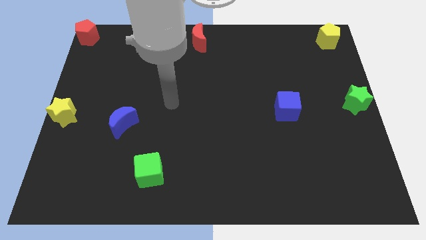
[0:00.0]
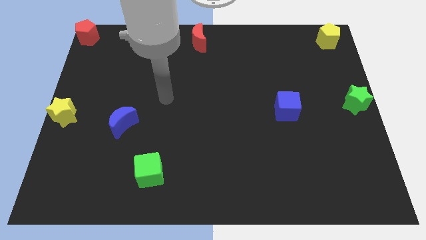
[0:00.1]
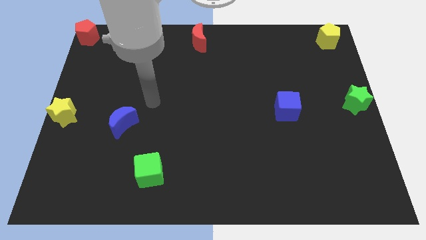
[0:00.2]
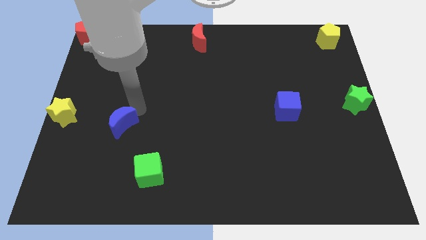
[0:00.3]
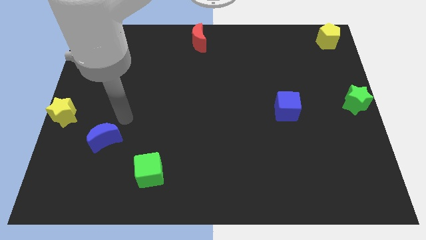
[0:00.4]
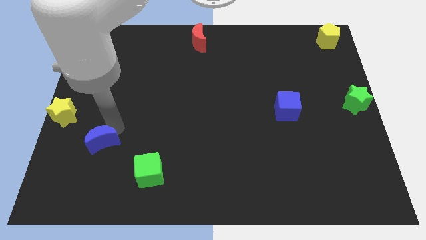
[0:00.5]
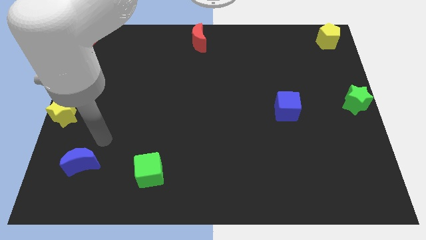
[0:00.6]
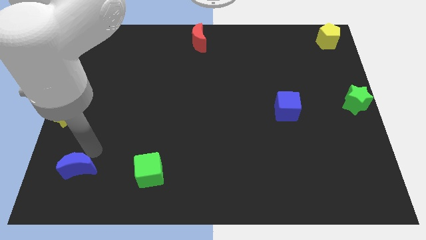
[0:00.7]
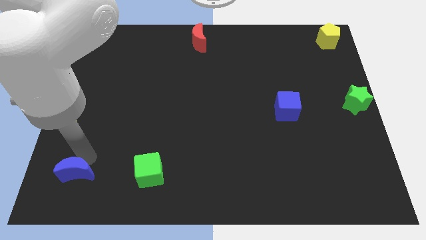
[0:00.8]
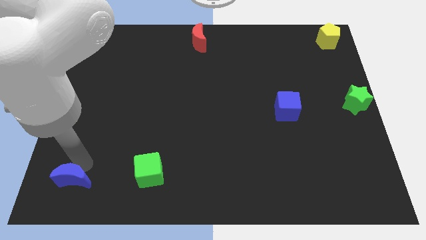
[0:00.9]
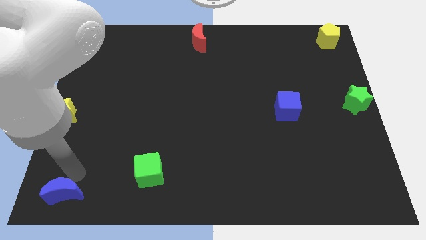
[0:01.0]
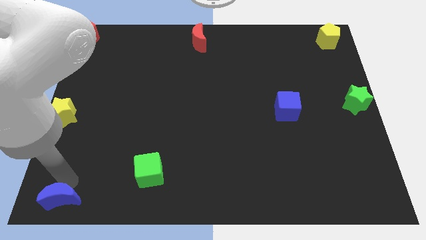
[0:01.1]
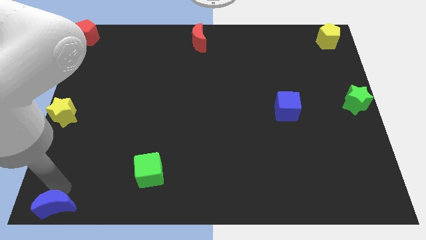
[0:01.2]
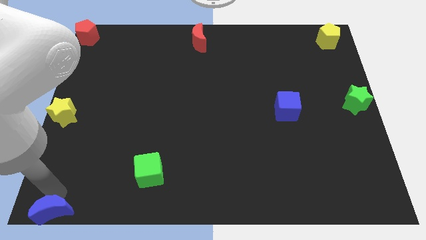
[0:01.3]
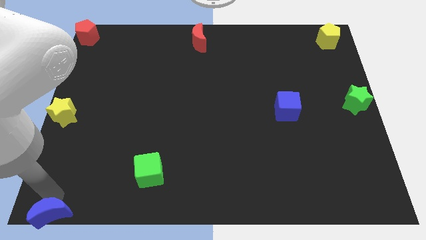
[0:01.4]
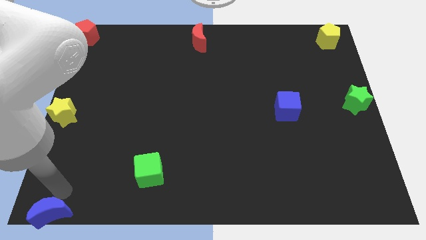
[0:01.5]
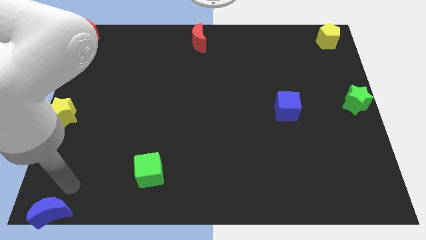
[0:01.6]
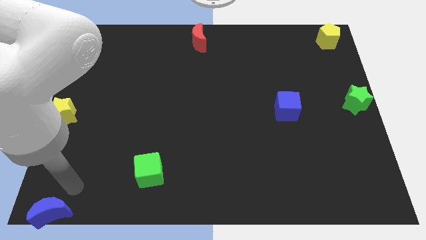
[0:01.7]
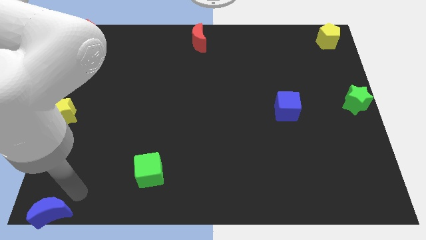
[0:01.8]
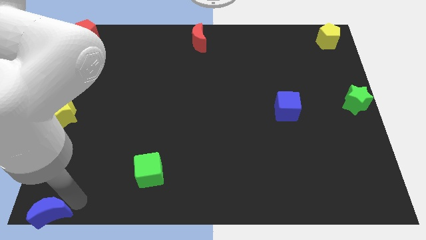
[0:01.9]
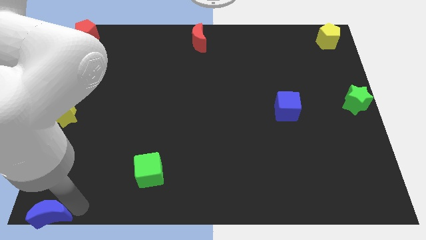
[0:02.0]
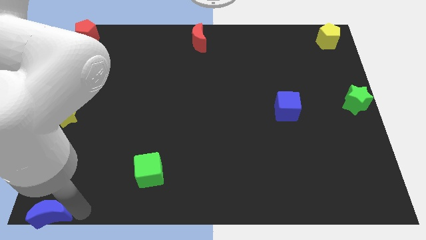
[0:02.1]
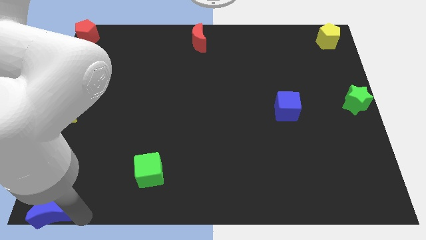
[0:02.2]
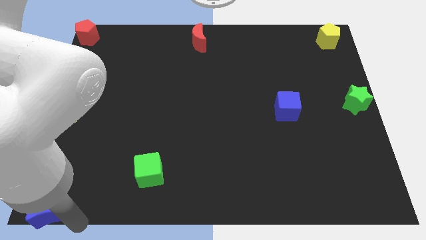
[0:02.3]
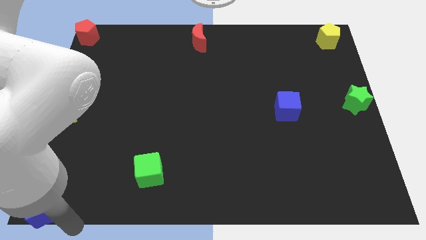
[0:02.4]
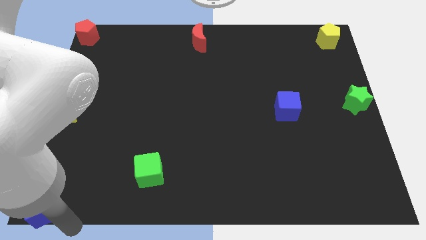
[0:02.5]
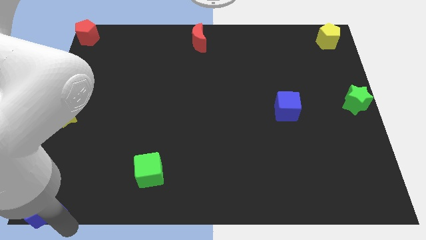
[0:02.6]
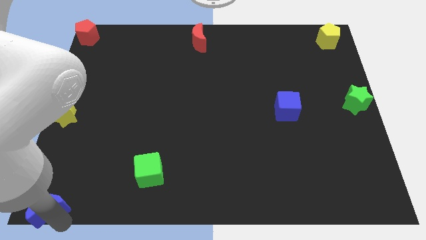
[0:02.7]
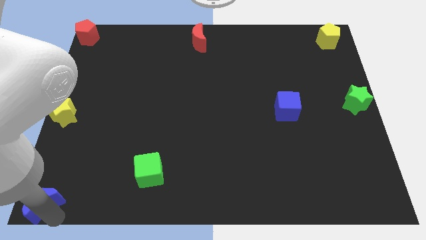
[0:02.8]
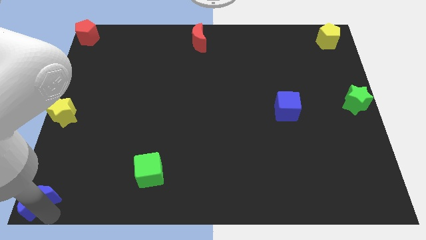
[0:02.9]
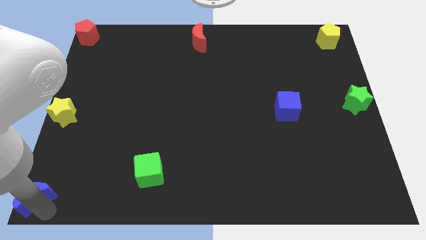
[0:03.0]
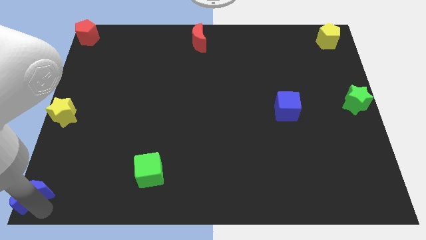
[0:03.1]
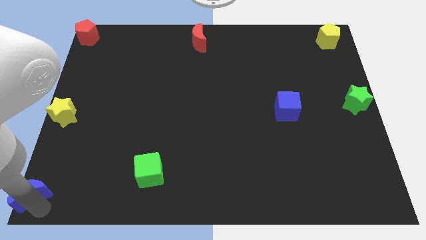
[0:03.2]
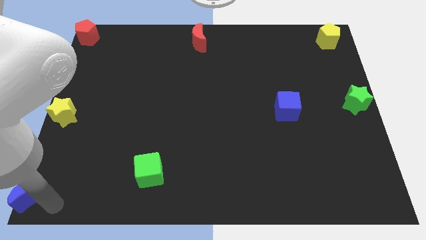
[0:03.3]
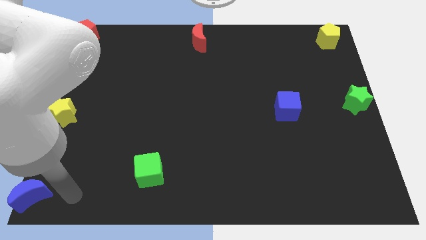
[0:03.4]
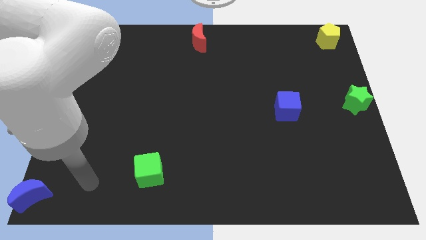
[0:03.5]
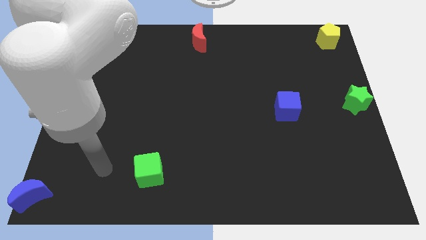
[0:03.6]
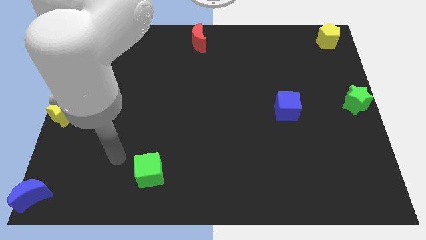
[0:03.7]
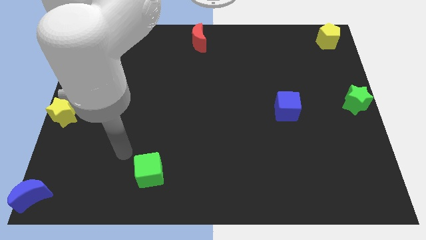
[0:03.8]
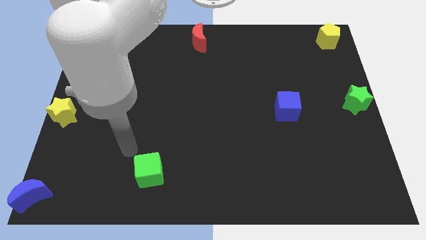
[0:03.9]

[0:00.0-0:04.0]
move the blue crescent to the bottom left corner

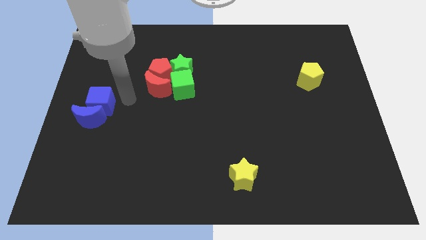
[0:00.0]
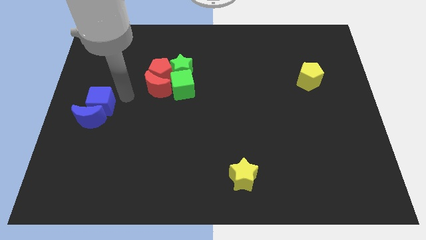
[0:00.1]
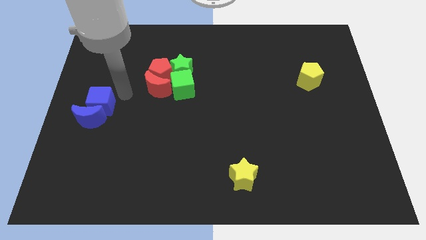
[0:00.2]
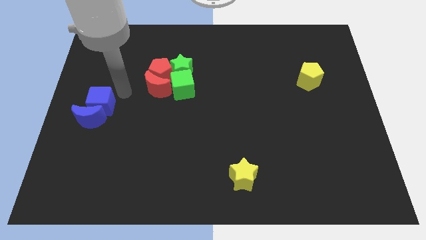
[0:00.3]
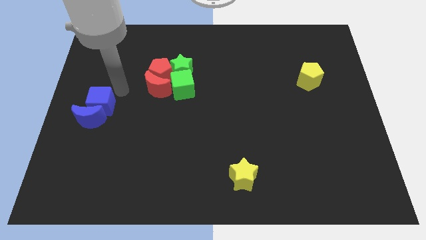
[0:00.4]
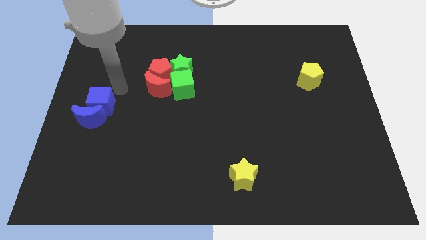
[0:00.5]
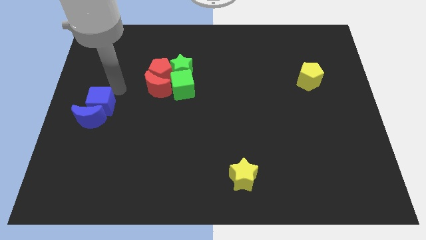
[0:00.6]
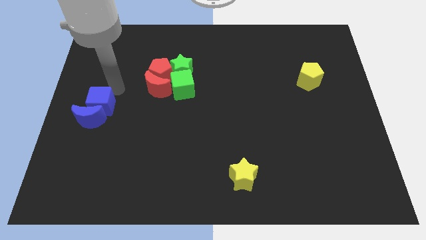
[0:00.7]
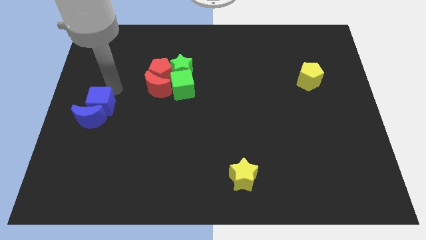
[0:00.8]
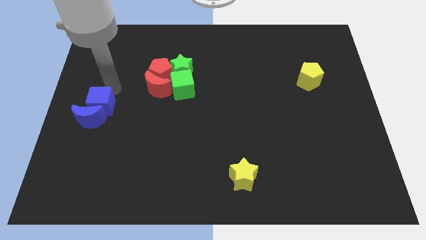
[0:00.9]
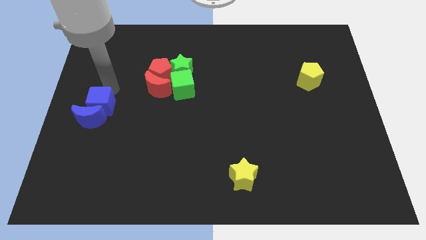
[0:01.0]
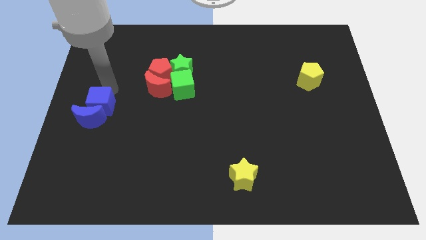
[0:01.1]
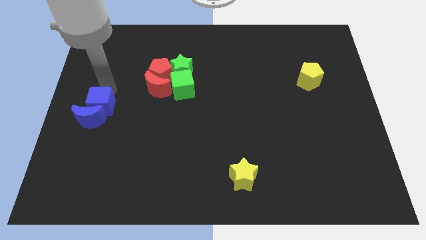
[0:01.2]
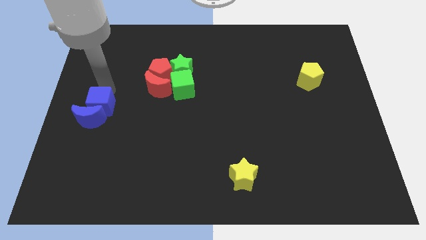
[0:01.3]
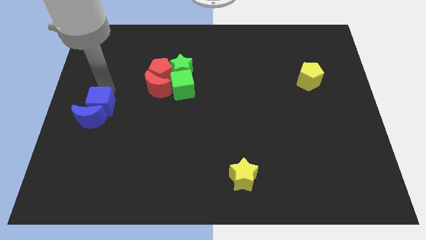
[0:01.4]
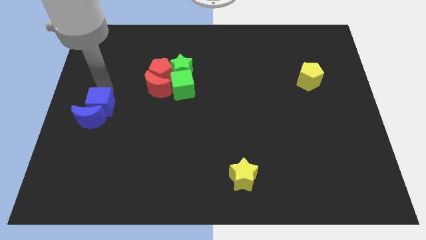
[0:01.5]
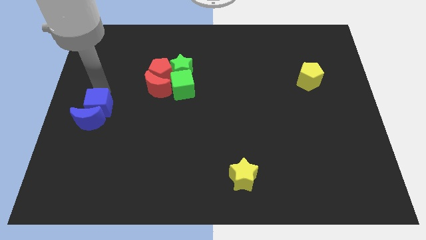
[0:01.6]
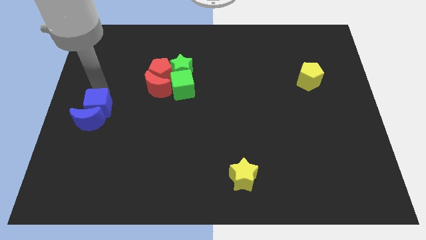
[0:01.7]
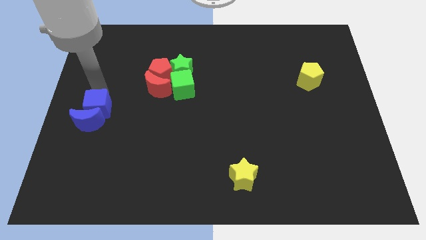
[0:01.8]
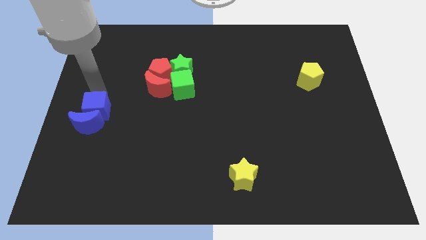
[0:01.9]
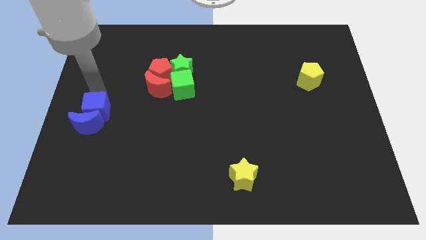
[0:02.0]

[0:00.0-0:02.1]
tap on the top of the blue cube

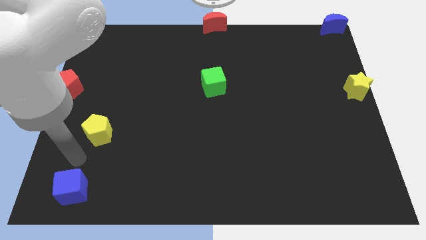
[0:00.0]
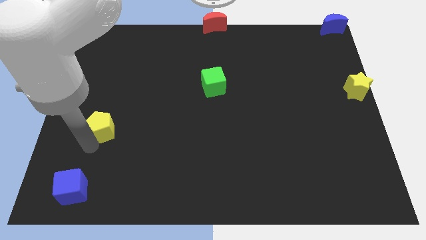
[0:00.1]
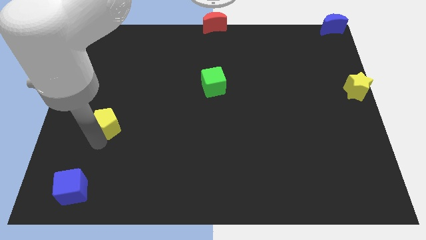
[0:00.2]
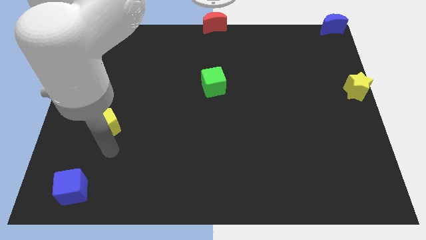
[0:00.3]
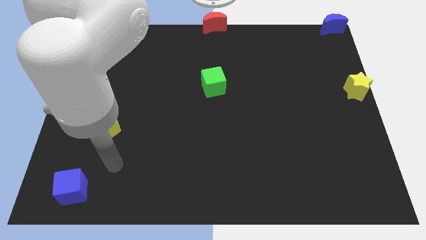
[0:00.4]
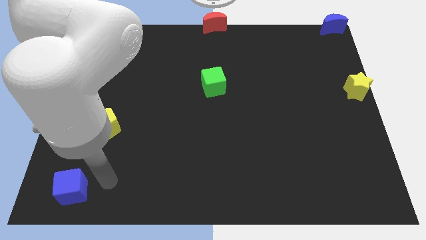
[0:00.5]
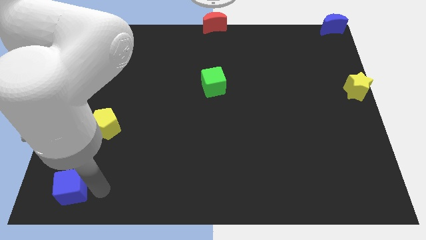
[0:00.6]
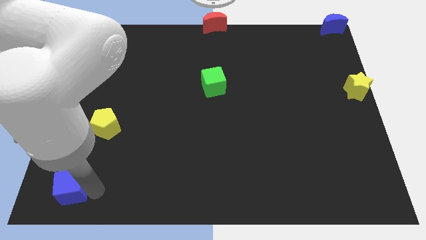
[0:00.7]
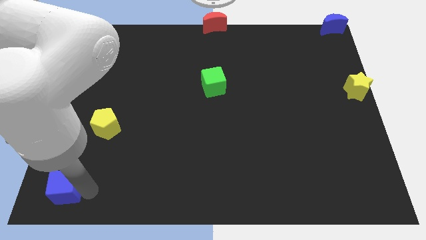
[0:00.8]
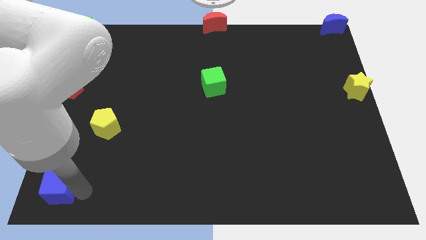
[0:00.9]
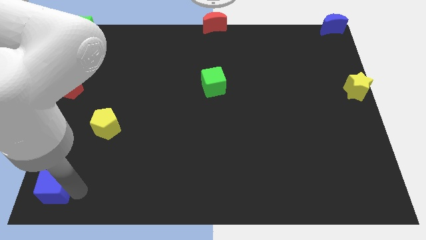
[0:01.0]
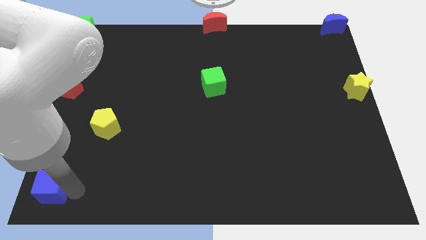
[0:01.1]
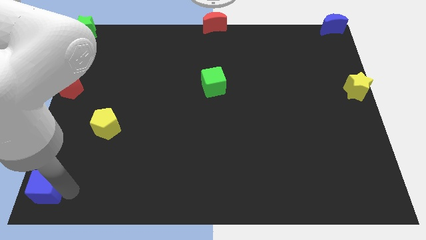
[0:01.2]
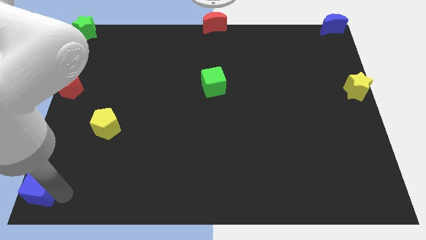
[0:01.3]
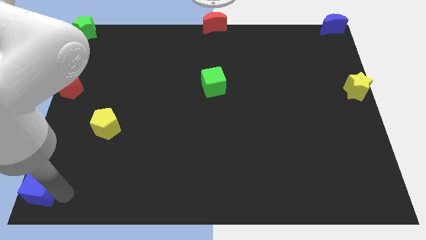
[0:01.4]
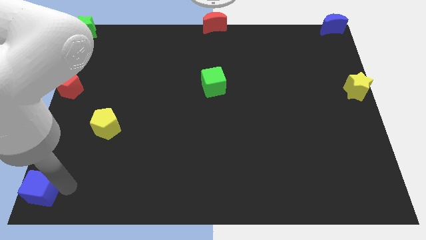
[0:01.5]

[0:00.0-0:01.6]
push blue cube towards bottom left corner of the board

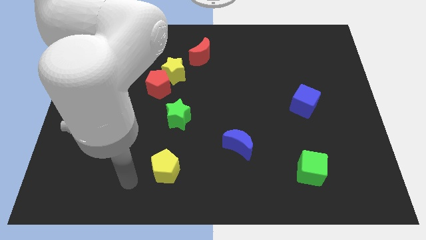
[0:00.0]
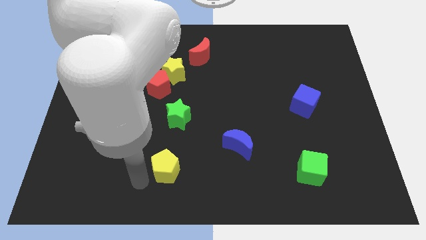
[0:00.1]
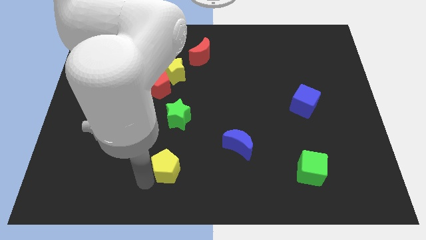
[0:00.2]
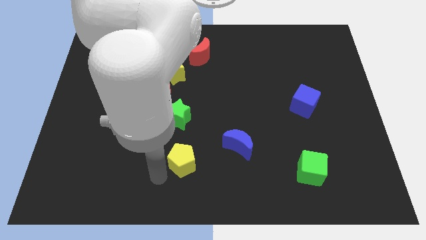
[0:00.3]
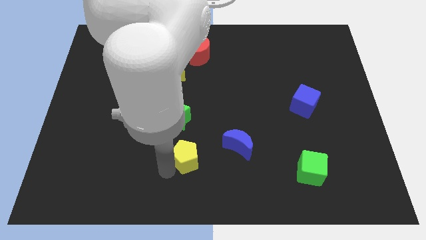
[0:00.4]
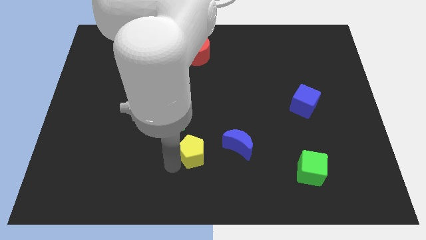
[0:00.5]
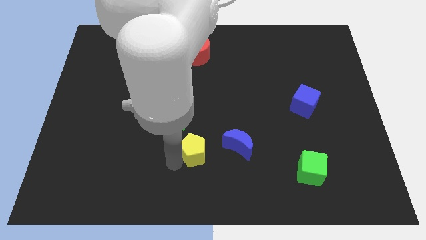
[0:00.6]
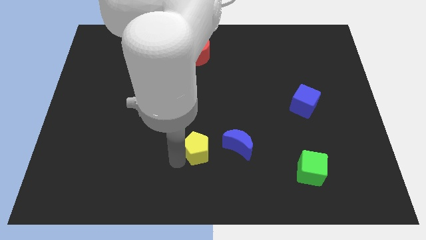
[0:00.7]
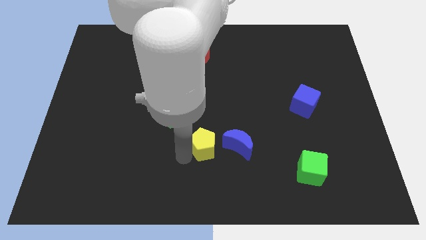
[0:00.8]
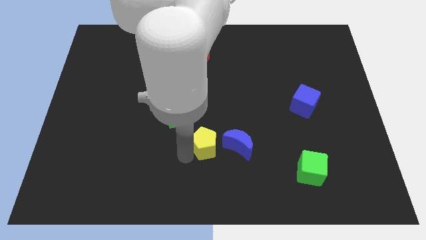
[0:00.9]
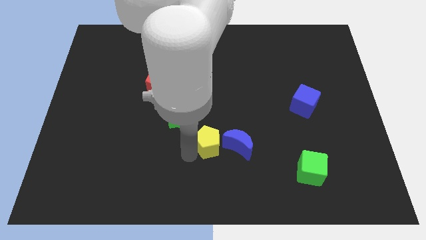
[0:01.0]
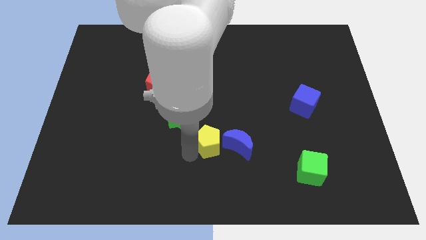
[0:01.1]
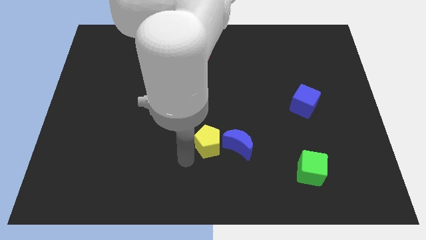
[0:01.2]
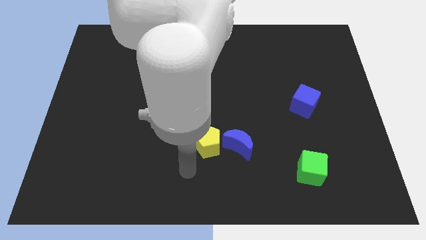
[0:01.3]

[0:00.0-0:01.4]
place the yellow pentagon to the left side of the blue crescent

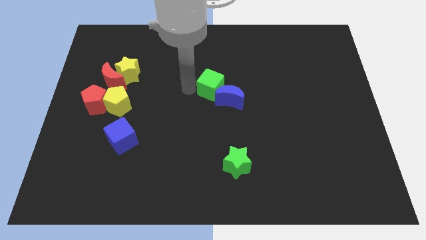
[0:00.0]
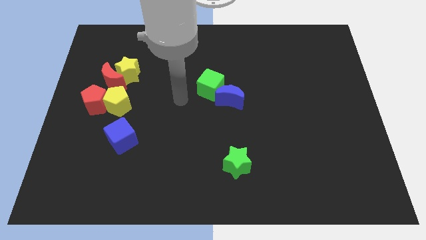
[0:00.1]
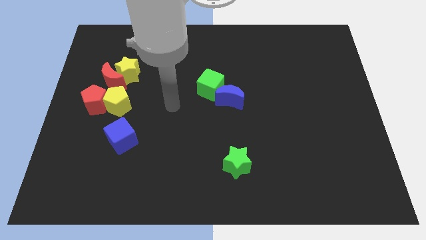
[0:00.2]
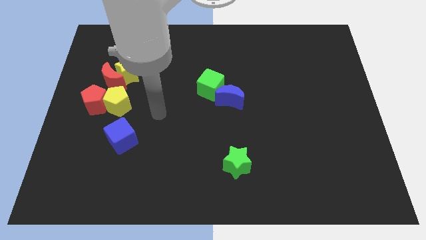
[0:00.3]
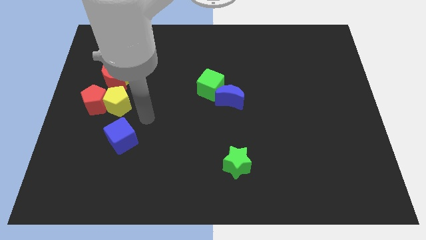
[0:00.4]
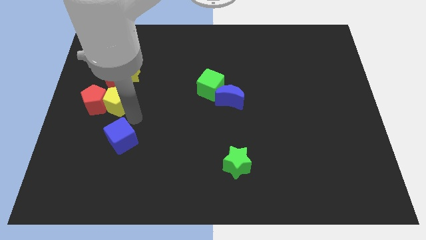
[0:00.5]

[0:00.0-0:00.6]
place your arm at the top right side of blue cube
